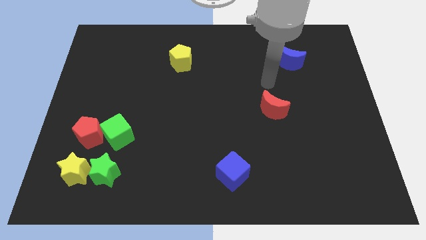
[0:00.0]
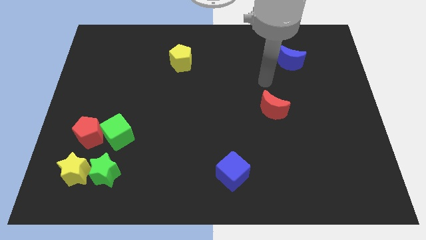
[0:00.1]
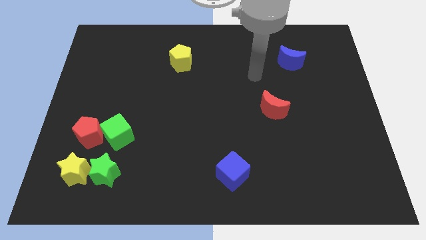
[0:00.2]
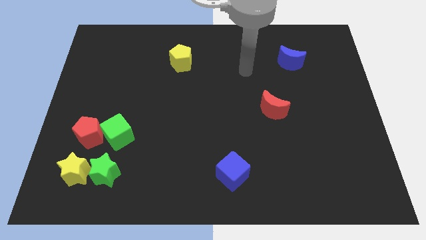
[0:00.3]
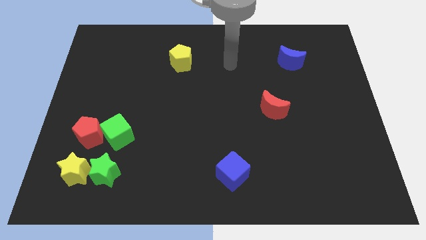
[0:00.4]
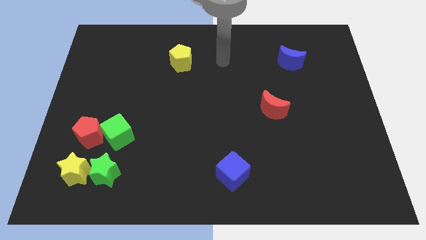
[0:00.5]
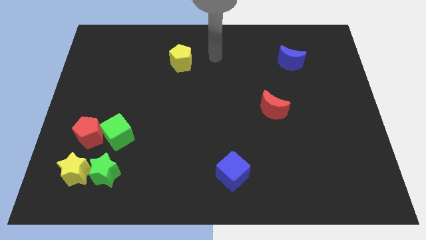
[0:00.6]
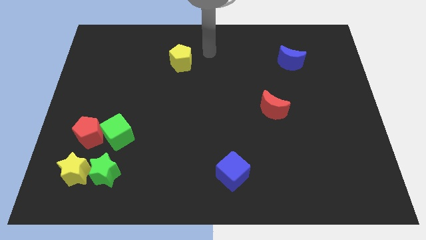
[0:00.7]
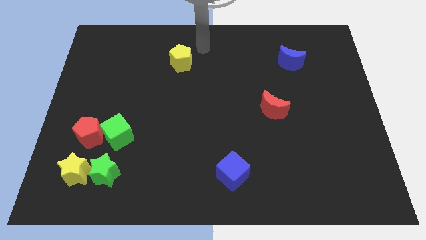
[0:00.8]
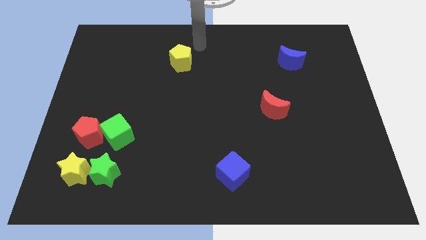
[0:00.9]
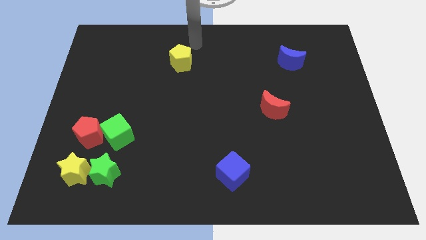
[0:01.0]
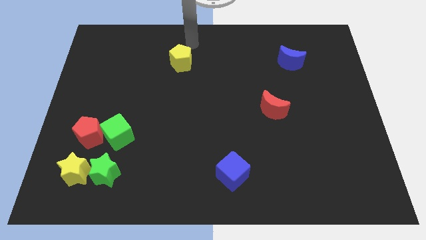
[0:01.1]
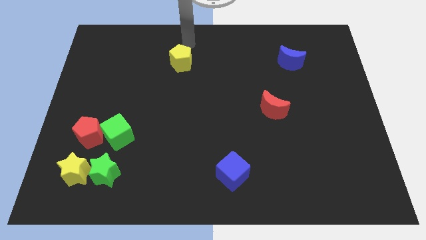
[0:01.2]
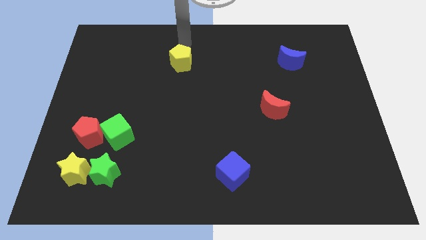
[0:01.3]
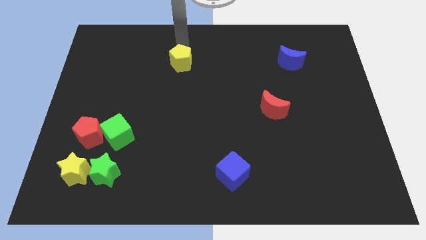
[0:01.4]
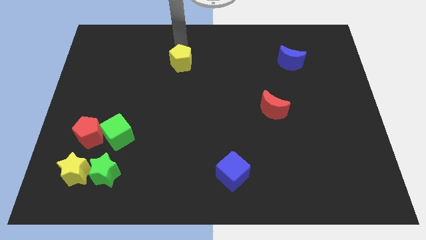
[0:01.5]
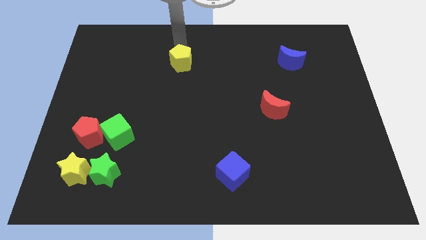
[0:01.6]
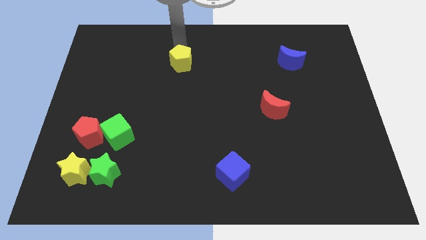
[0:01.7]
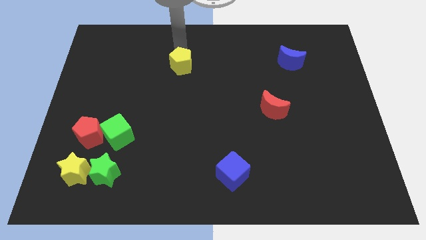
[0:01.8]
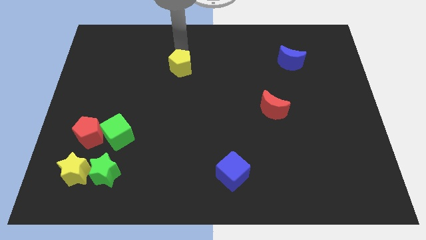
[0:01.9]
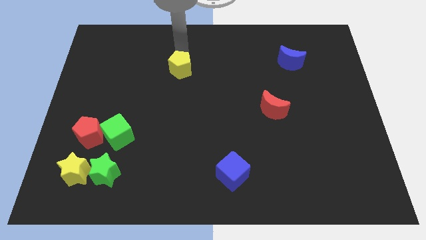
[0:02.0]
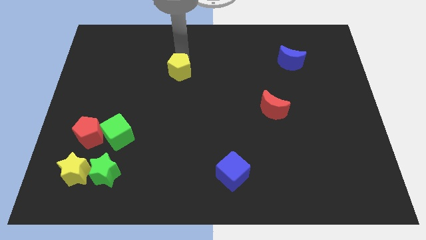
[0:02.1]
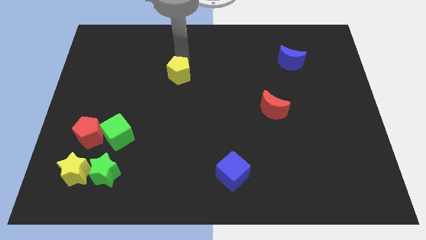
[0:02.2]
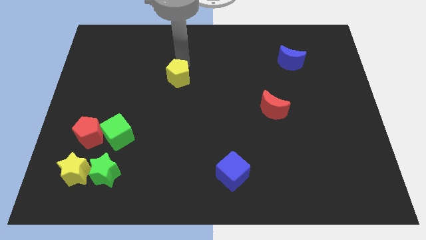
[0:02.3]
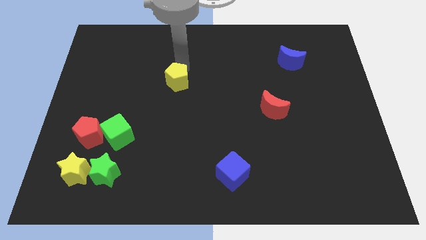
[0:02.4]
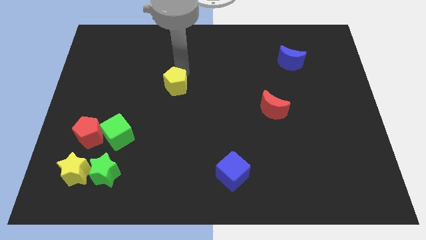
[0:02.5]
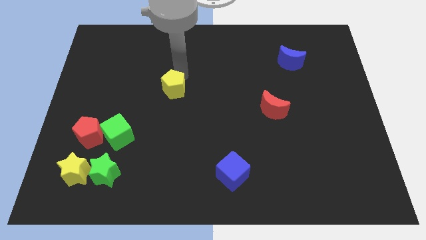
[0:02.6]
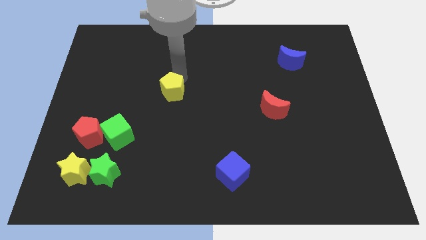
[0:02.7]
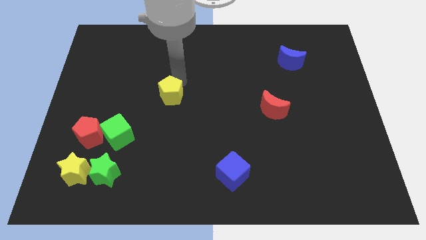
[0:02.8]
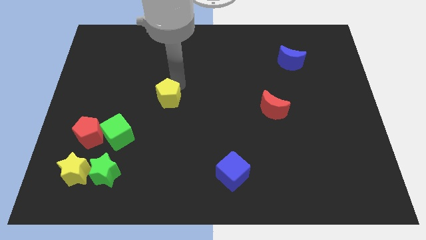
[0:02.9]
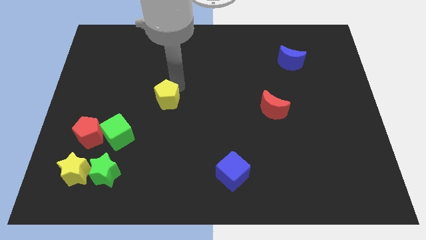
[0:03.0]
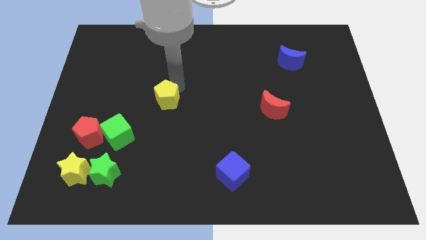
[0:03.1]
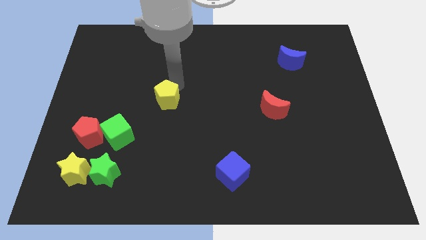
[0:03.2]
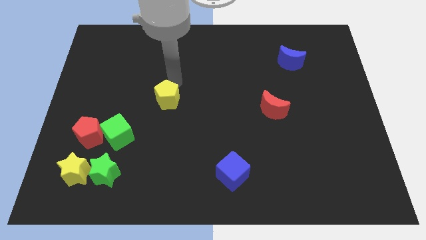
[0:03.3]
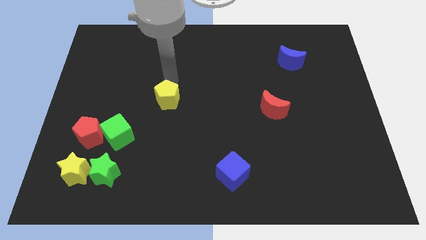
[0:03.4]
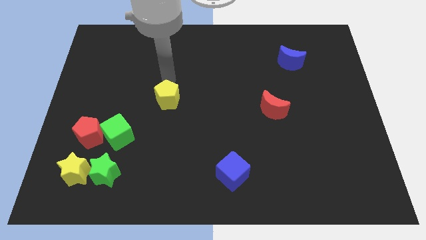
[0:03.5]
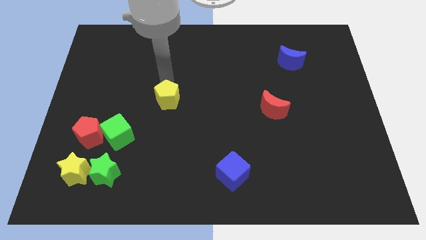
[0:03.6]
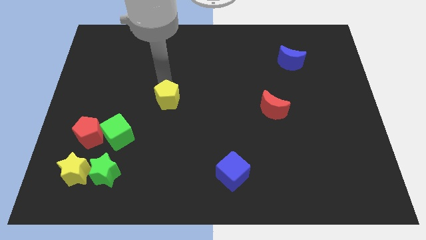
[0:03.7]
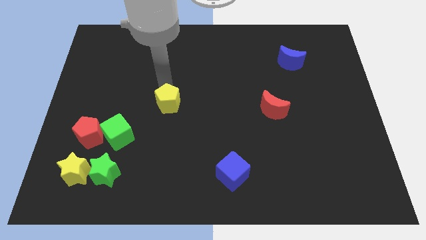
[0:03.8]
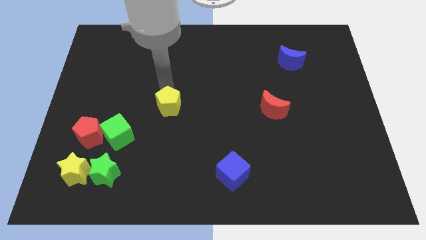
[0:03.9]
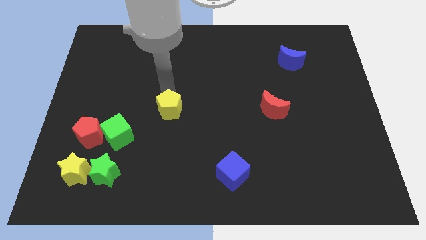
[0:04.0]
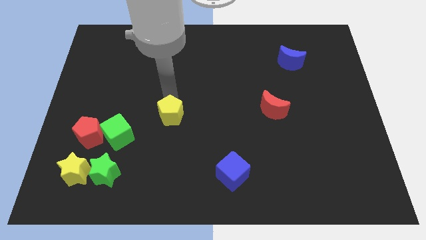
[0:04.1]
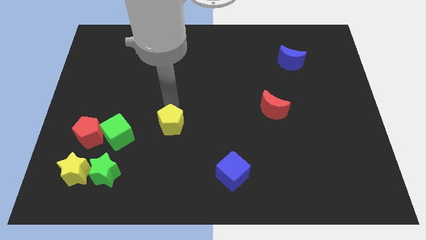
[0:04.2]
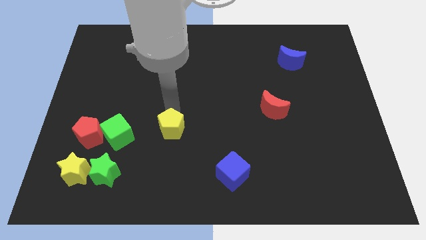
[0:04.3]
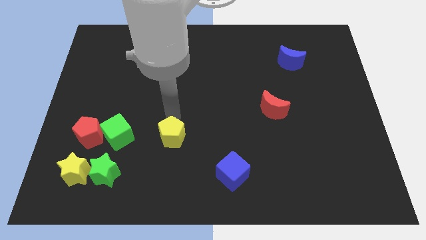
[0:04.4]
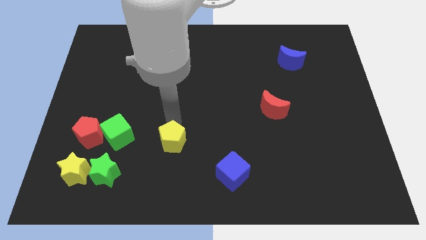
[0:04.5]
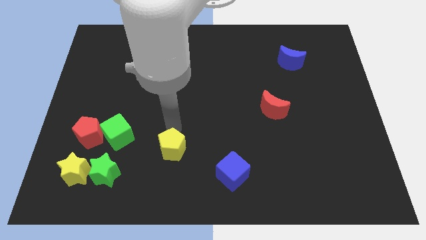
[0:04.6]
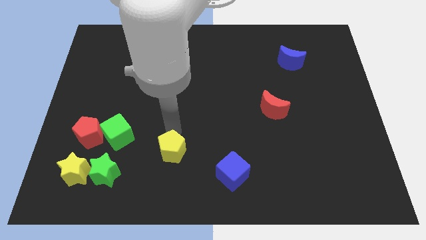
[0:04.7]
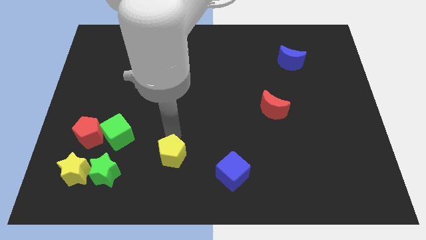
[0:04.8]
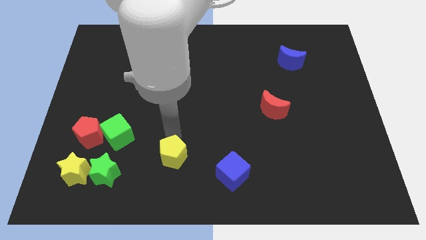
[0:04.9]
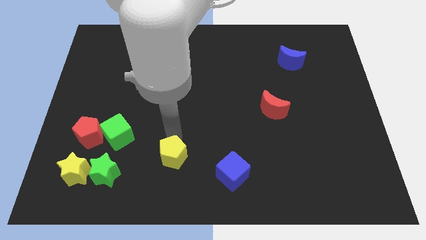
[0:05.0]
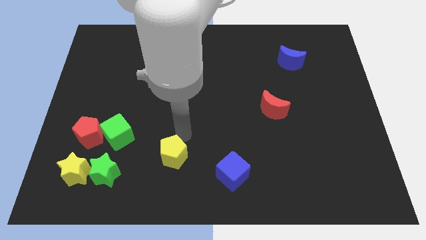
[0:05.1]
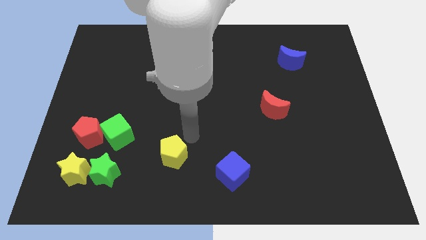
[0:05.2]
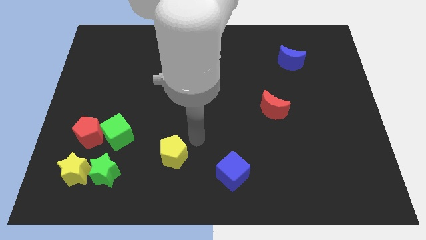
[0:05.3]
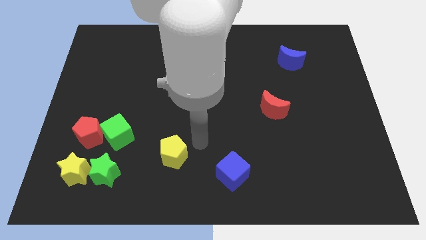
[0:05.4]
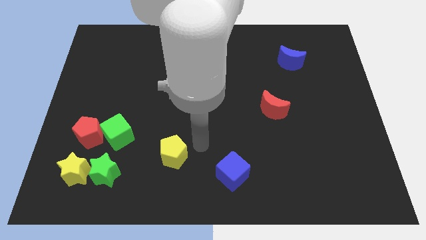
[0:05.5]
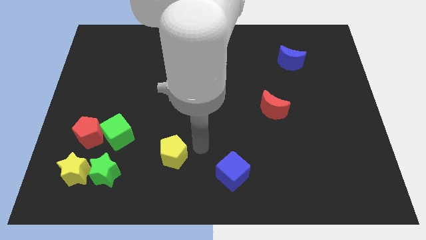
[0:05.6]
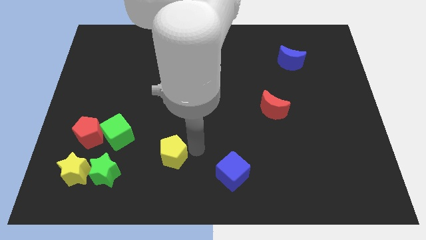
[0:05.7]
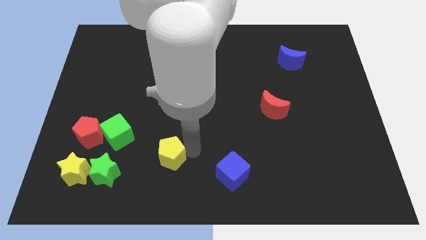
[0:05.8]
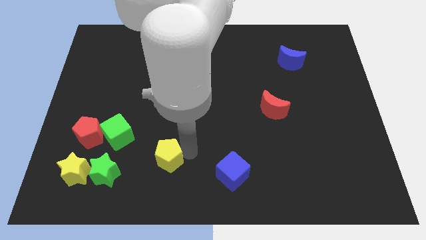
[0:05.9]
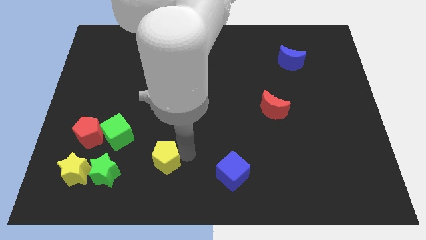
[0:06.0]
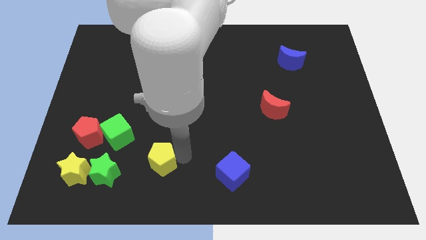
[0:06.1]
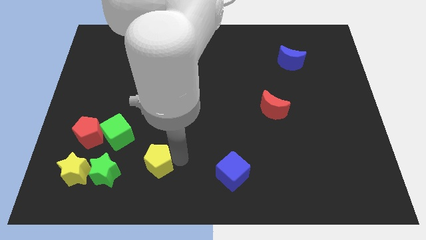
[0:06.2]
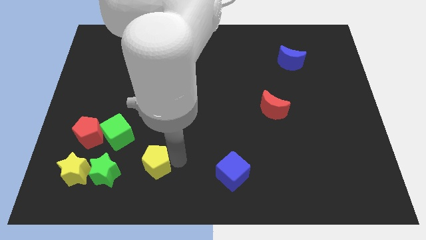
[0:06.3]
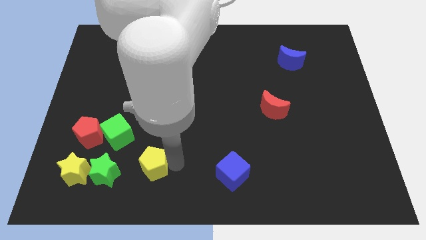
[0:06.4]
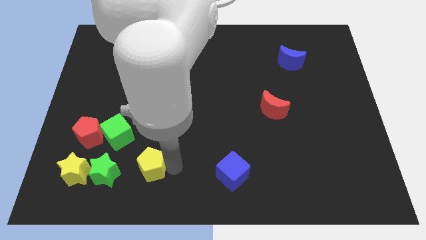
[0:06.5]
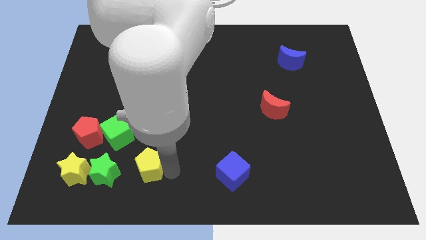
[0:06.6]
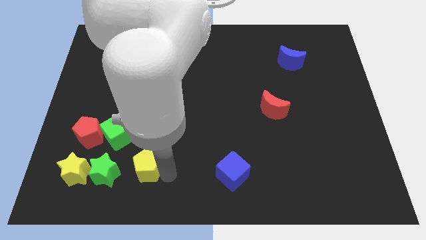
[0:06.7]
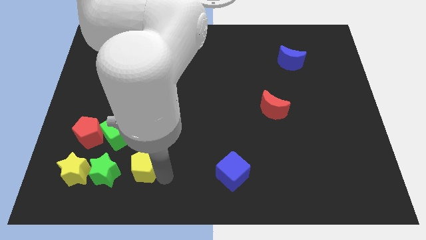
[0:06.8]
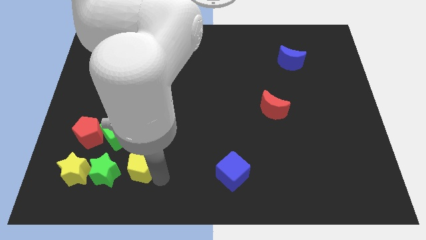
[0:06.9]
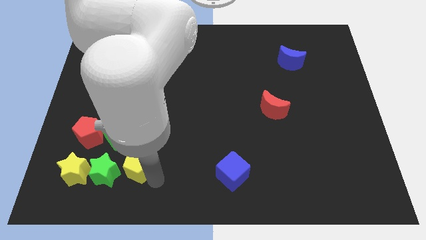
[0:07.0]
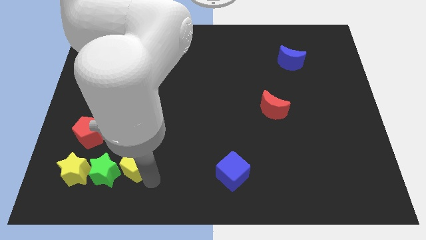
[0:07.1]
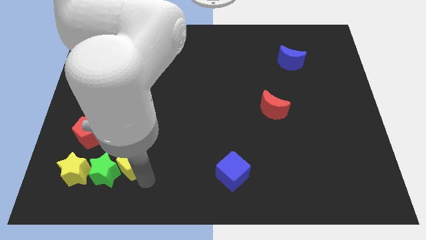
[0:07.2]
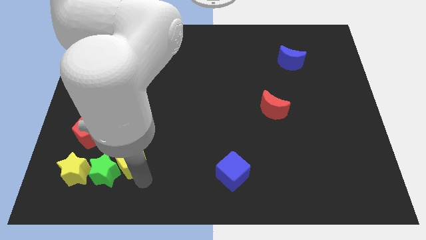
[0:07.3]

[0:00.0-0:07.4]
move the yellow pentagon next to the green star

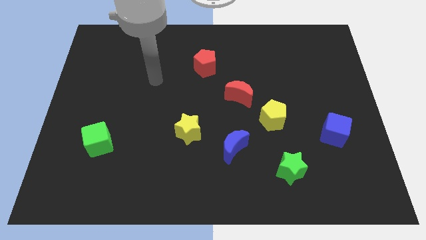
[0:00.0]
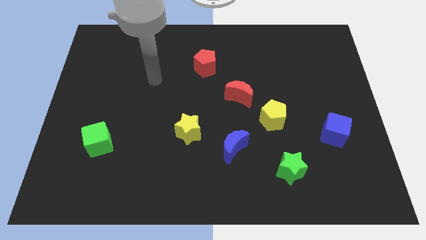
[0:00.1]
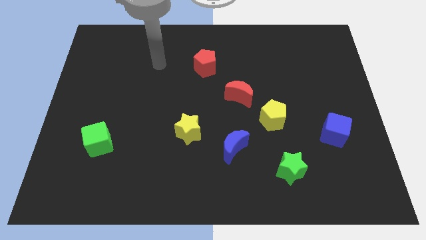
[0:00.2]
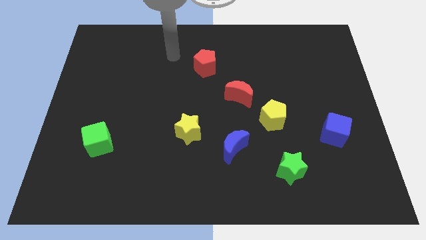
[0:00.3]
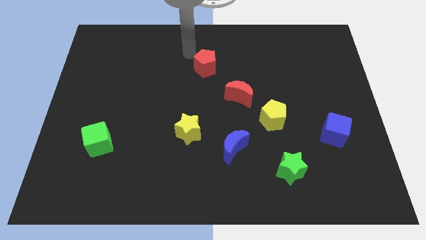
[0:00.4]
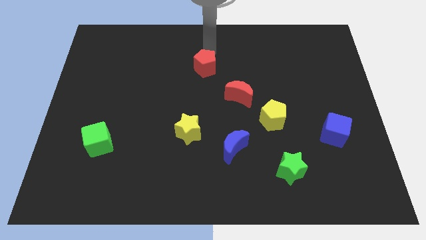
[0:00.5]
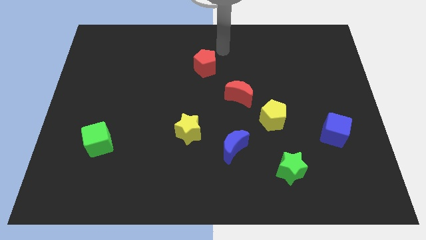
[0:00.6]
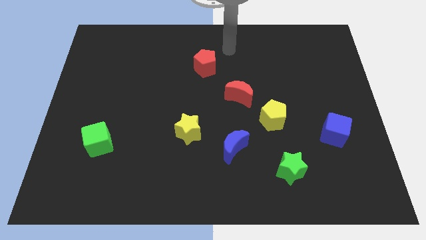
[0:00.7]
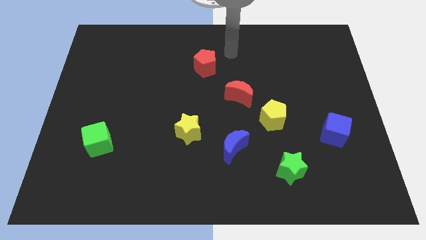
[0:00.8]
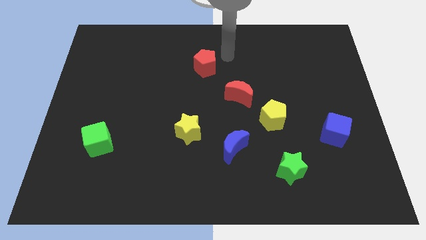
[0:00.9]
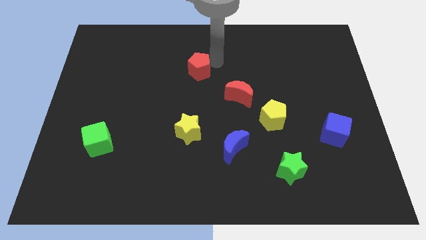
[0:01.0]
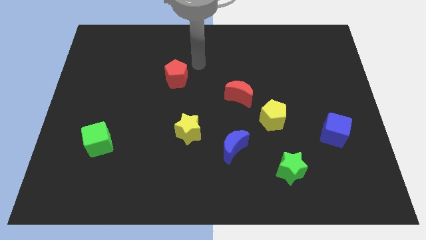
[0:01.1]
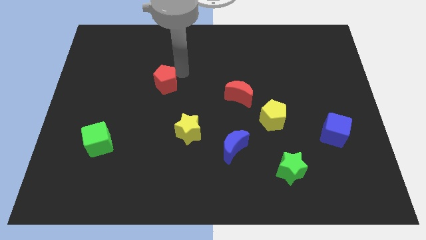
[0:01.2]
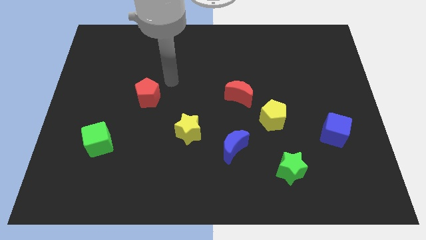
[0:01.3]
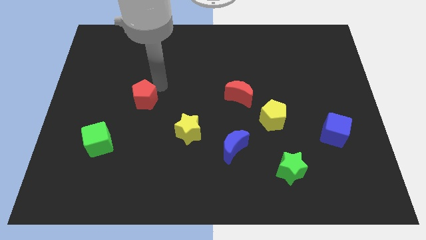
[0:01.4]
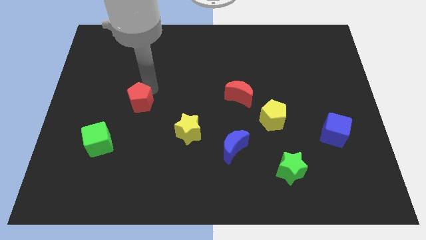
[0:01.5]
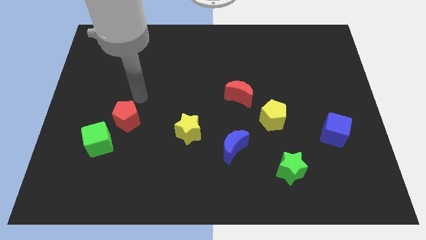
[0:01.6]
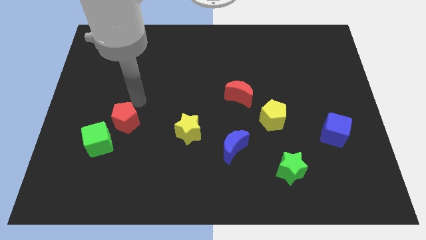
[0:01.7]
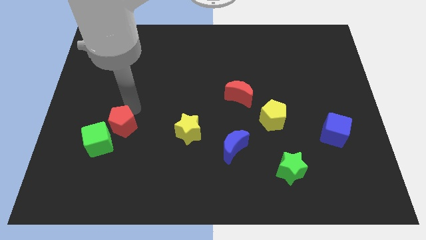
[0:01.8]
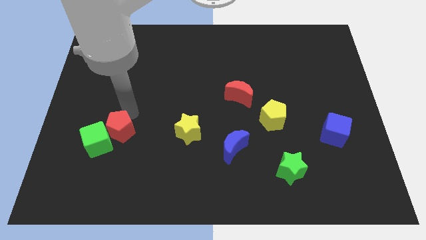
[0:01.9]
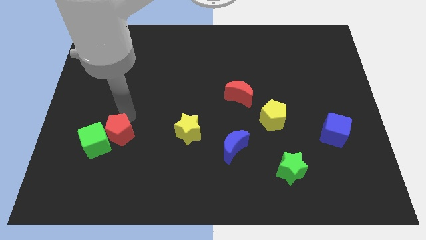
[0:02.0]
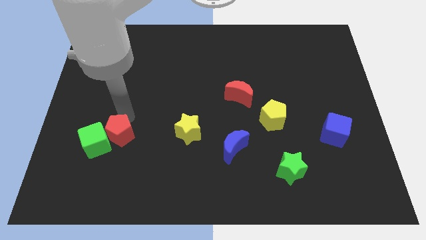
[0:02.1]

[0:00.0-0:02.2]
push the red pentagon next to the green cube
